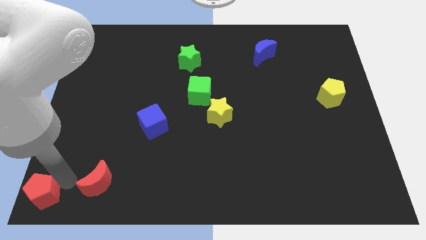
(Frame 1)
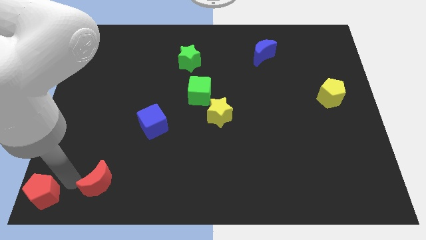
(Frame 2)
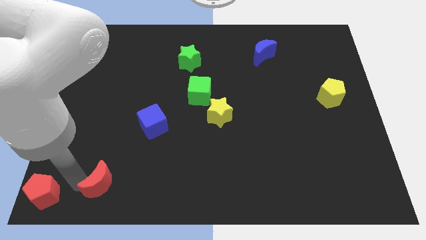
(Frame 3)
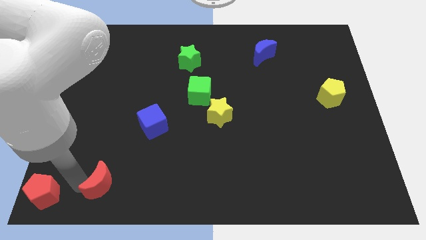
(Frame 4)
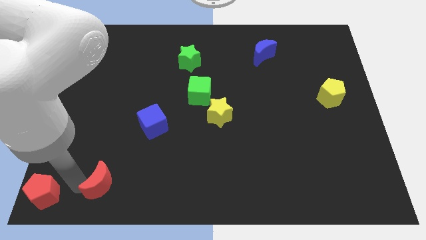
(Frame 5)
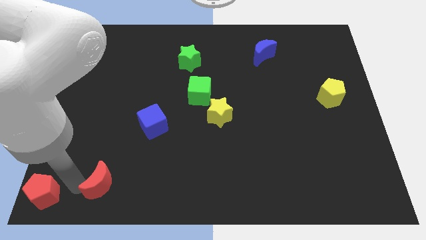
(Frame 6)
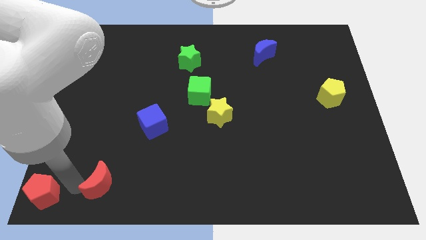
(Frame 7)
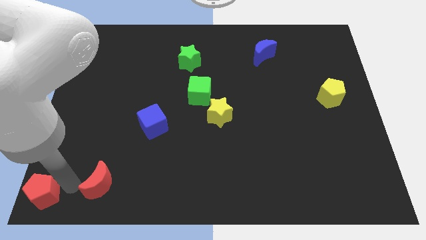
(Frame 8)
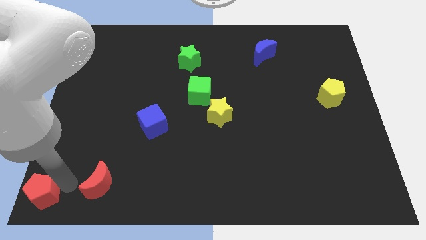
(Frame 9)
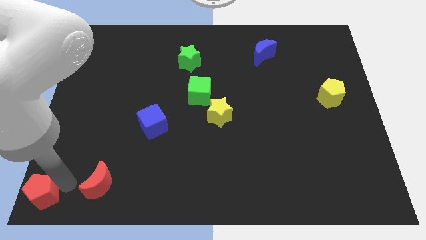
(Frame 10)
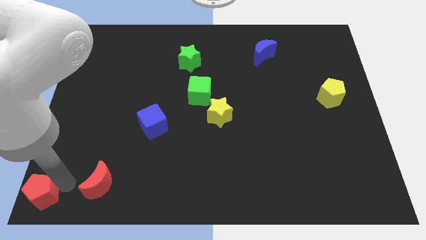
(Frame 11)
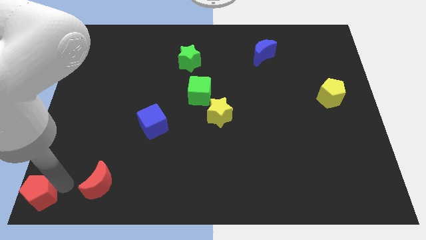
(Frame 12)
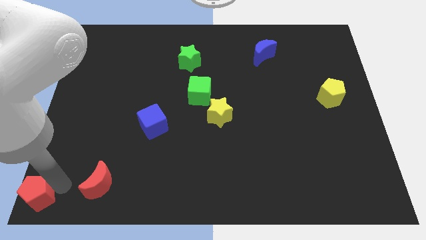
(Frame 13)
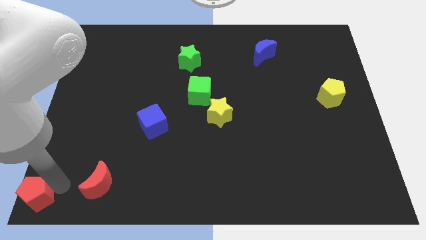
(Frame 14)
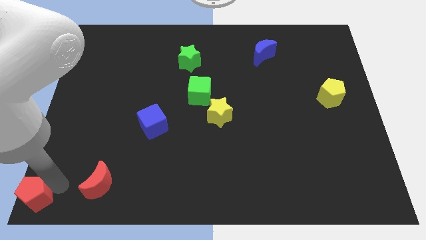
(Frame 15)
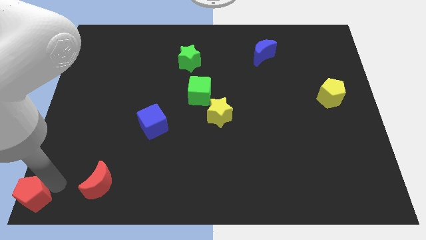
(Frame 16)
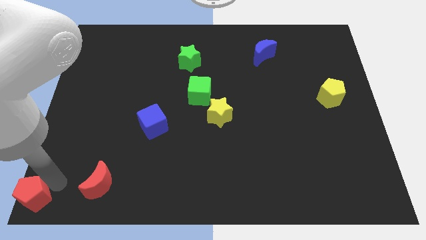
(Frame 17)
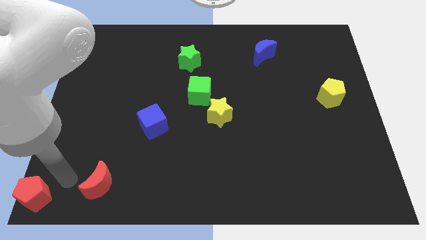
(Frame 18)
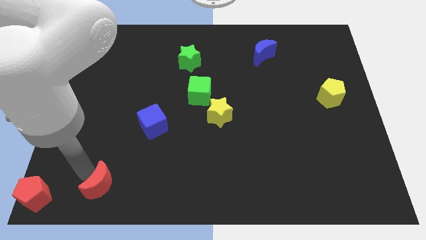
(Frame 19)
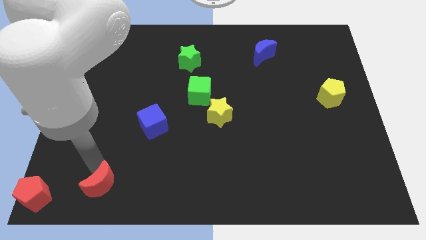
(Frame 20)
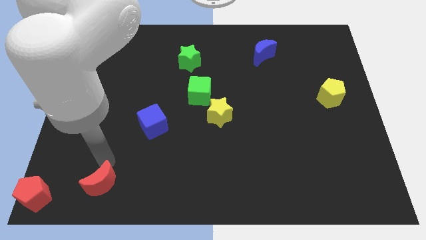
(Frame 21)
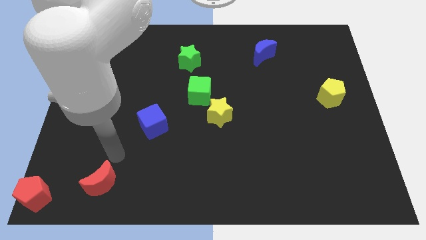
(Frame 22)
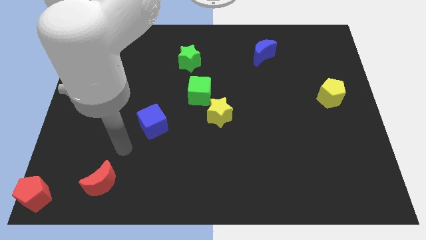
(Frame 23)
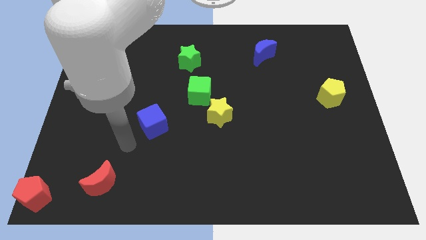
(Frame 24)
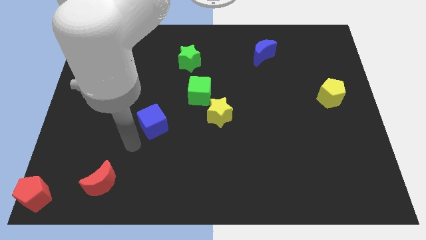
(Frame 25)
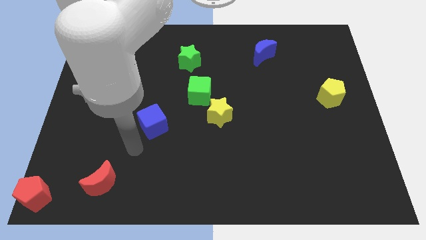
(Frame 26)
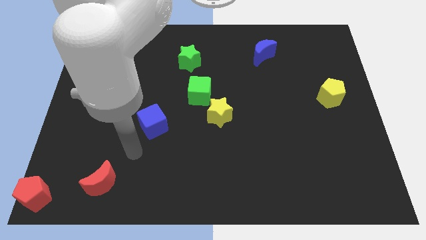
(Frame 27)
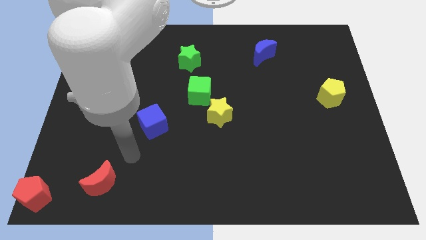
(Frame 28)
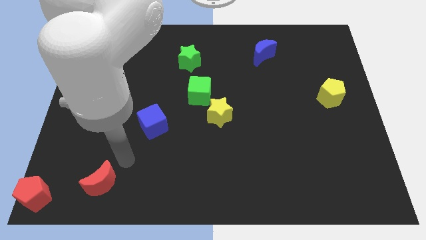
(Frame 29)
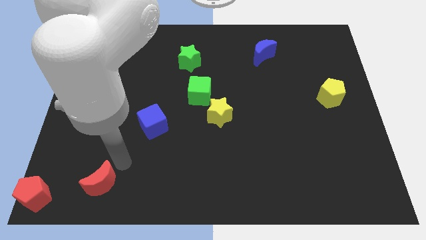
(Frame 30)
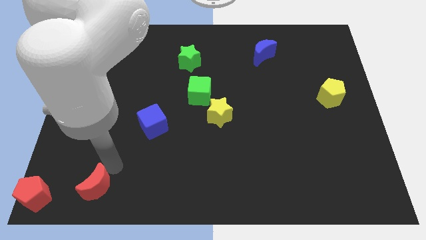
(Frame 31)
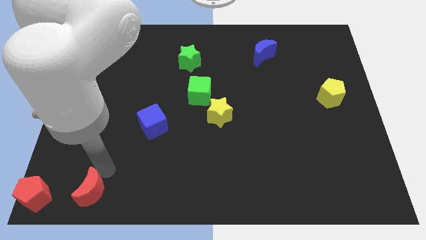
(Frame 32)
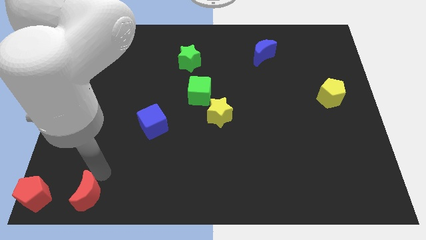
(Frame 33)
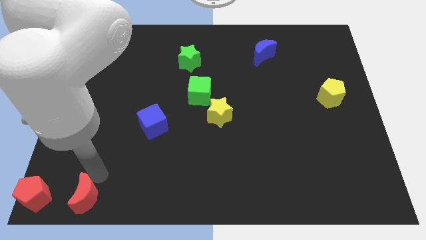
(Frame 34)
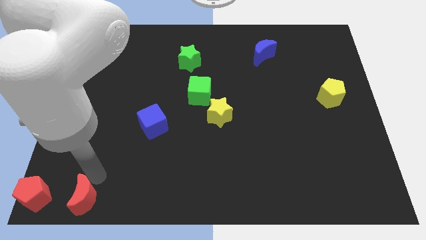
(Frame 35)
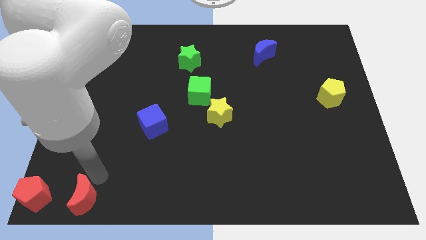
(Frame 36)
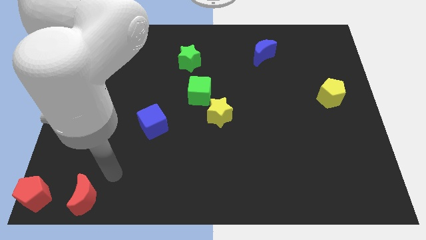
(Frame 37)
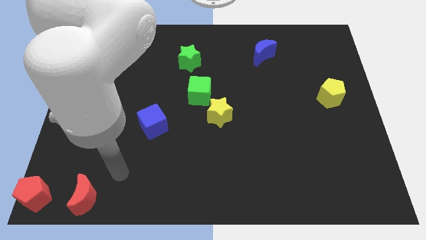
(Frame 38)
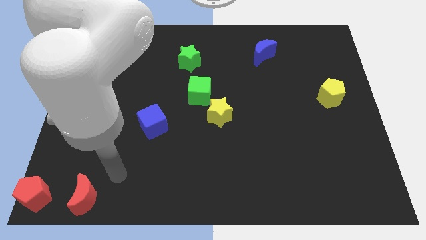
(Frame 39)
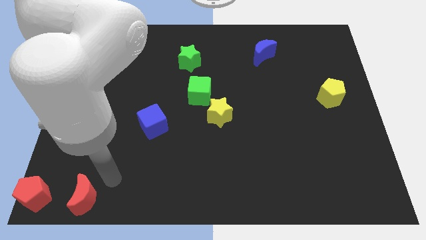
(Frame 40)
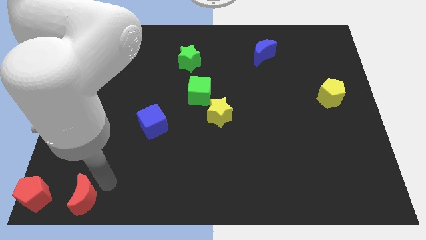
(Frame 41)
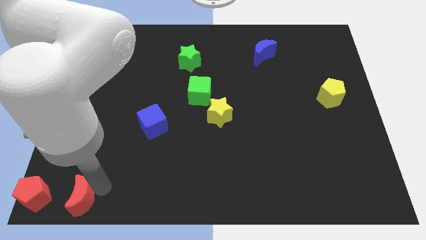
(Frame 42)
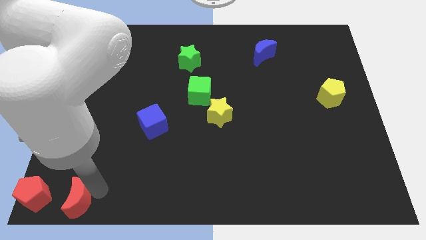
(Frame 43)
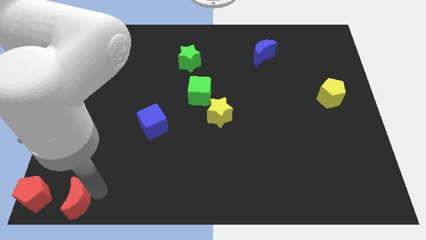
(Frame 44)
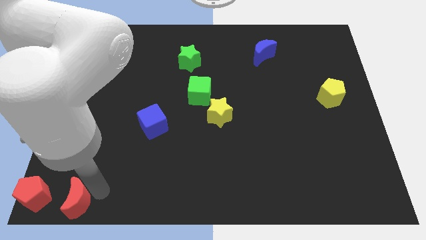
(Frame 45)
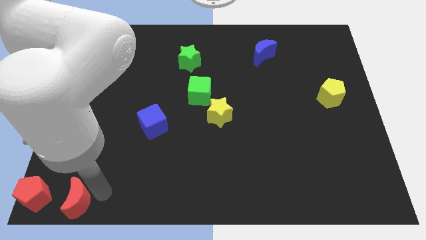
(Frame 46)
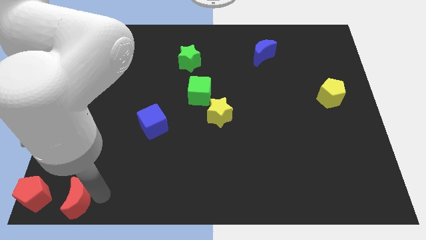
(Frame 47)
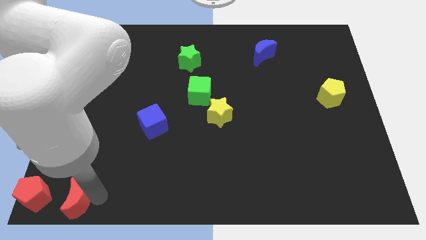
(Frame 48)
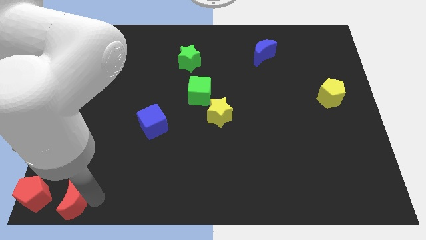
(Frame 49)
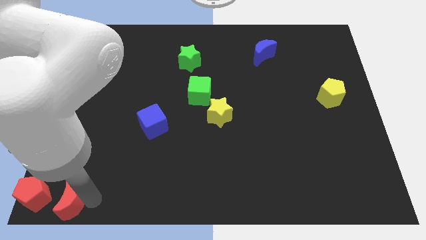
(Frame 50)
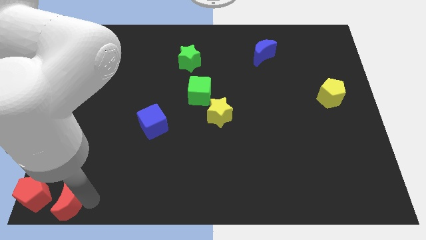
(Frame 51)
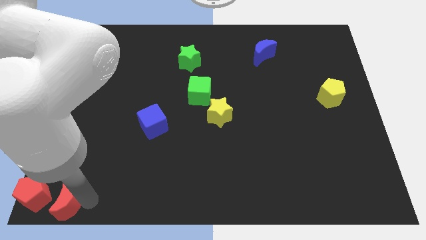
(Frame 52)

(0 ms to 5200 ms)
push the red pentagon and red crescent towards the left bottom of the board

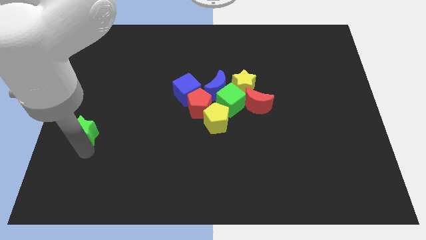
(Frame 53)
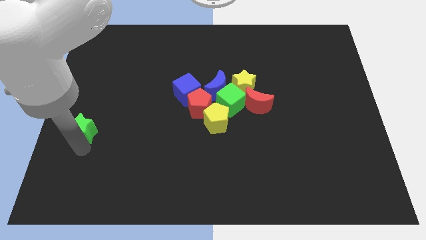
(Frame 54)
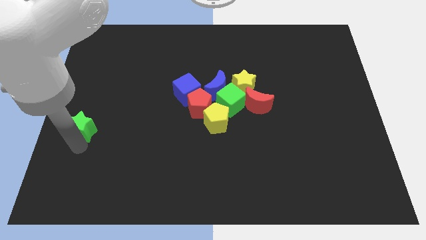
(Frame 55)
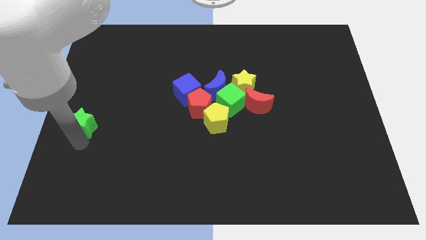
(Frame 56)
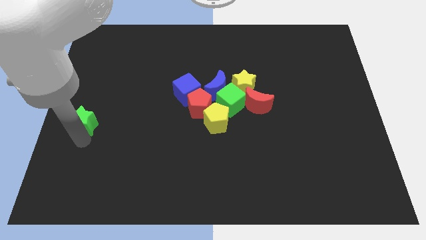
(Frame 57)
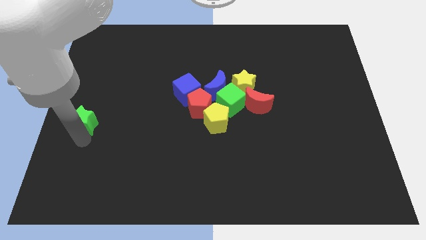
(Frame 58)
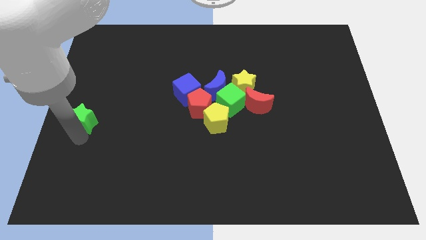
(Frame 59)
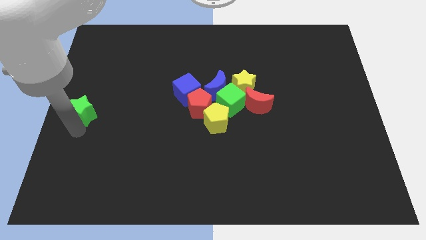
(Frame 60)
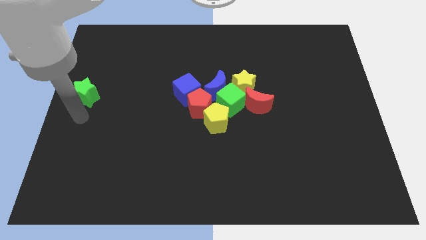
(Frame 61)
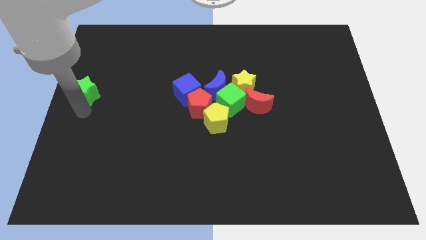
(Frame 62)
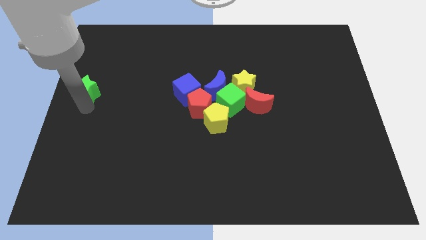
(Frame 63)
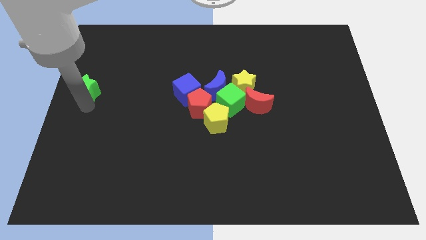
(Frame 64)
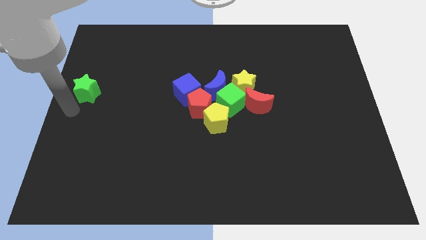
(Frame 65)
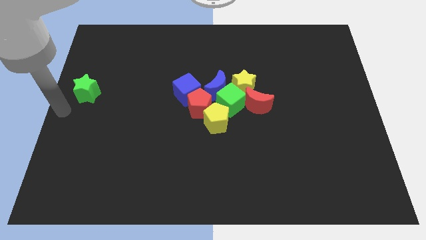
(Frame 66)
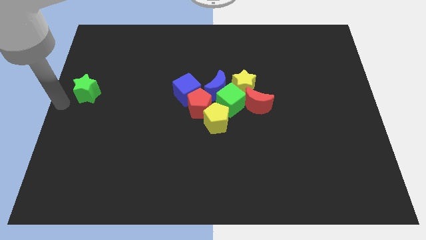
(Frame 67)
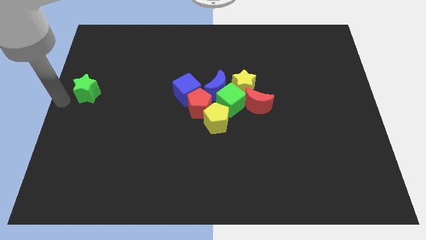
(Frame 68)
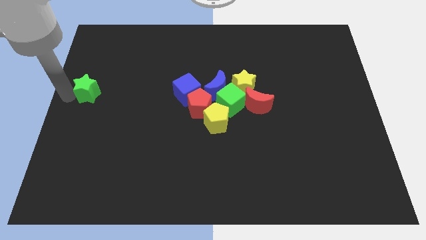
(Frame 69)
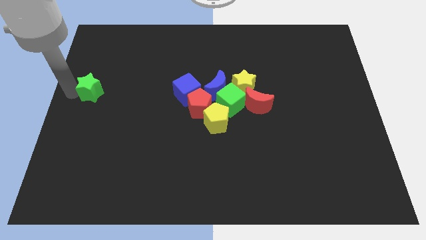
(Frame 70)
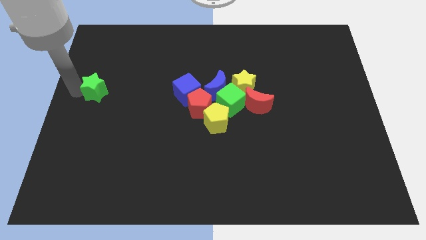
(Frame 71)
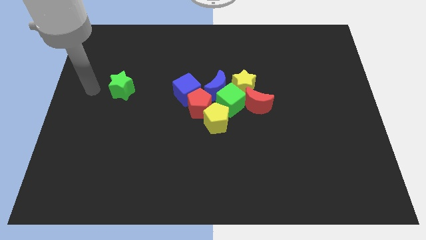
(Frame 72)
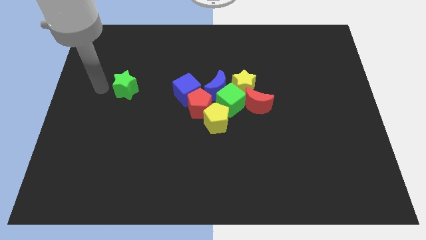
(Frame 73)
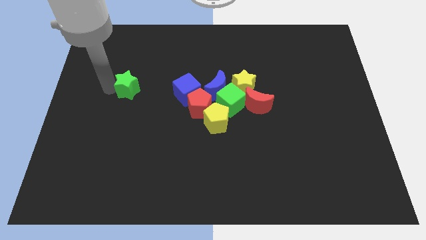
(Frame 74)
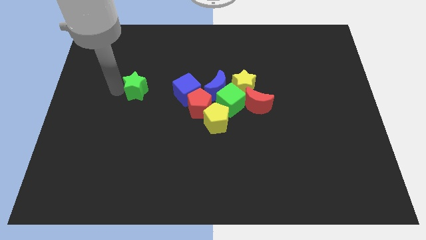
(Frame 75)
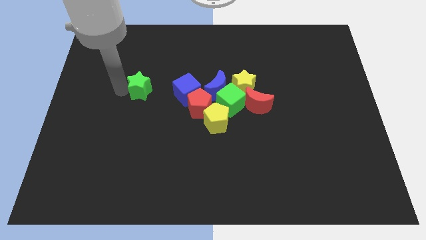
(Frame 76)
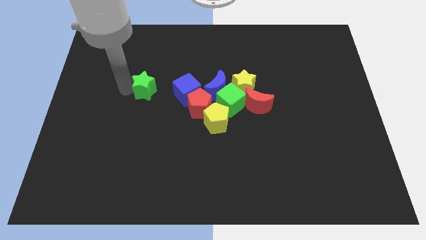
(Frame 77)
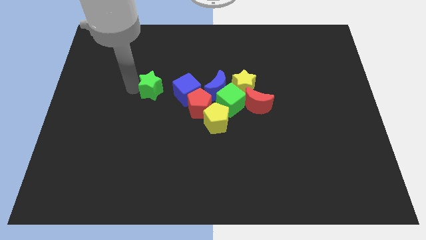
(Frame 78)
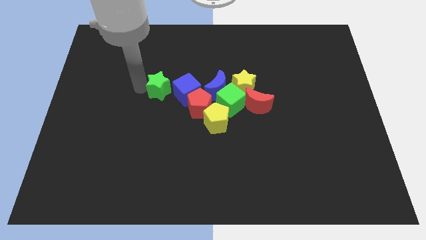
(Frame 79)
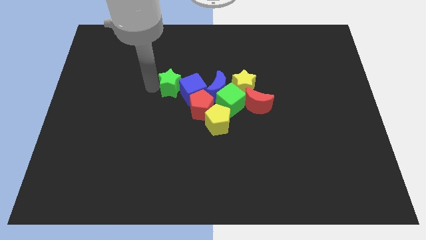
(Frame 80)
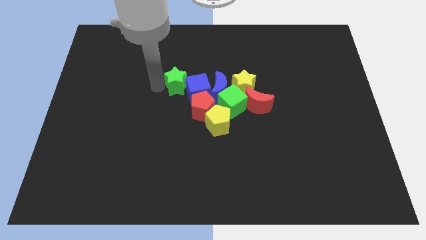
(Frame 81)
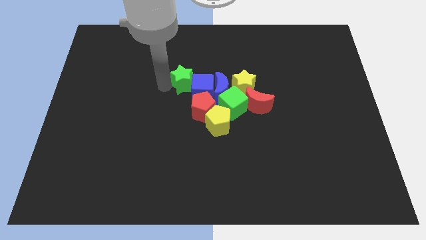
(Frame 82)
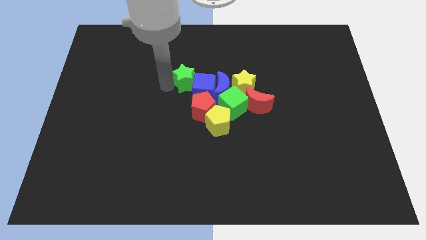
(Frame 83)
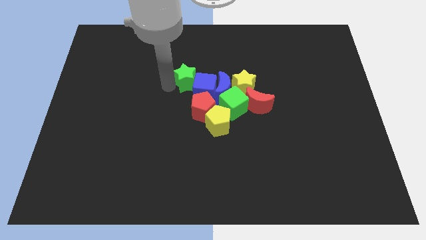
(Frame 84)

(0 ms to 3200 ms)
push green star into blue cube

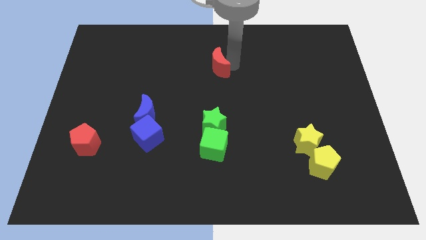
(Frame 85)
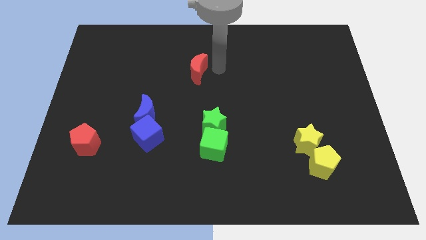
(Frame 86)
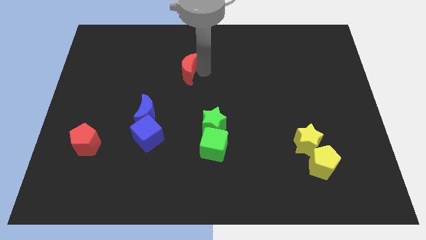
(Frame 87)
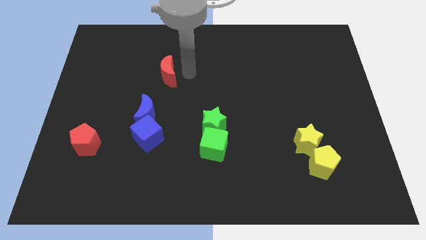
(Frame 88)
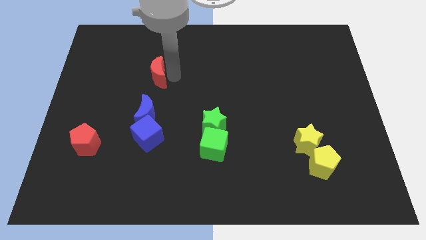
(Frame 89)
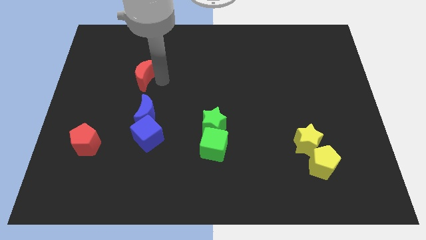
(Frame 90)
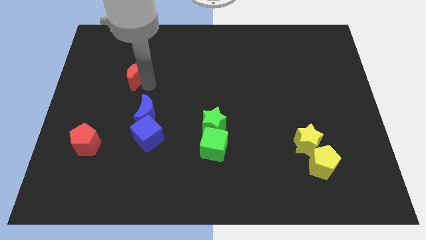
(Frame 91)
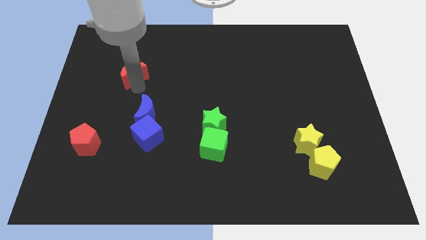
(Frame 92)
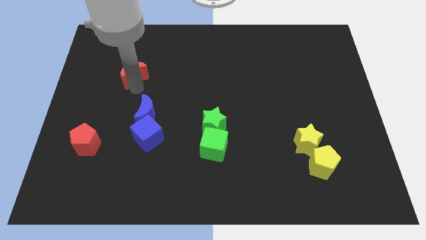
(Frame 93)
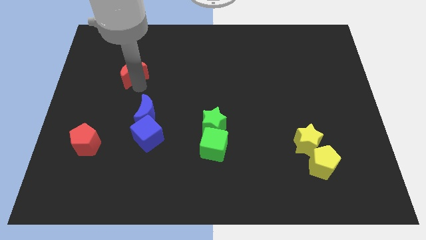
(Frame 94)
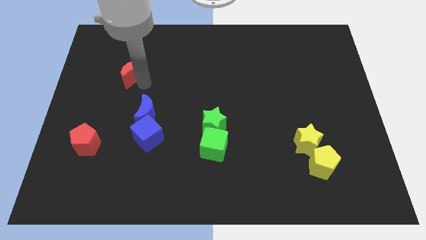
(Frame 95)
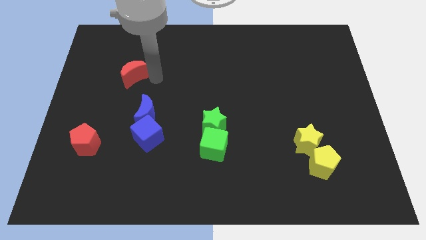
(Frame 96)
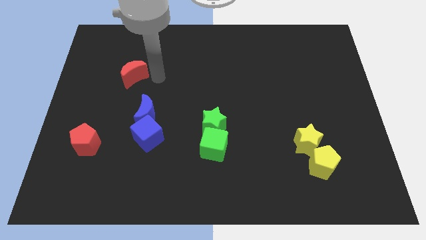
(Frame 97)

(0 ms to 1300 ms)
move the red moon towards the top side of the blue moon
